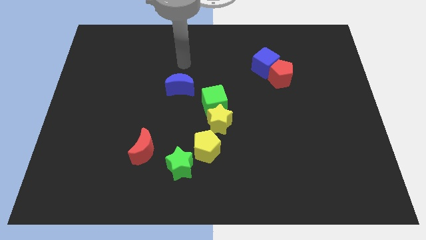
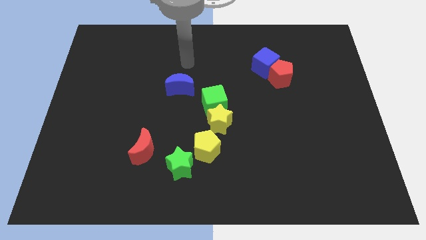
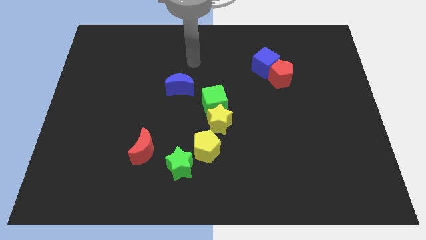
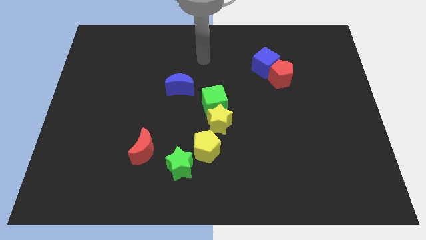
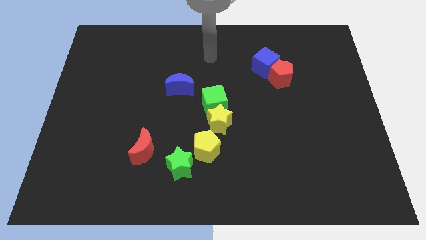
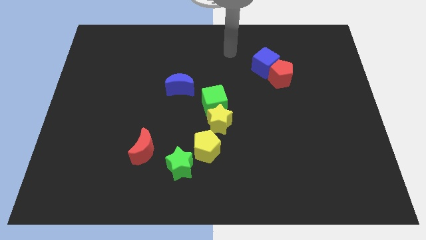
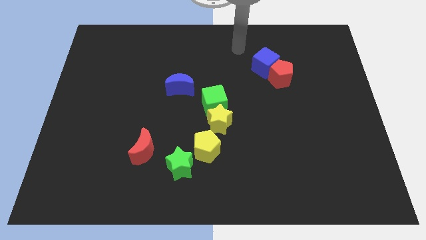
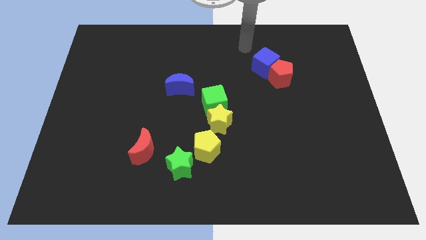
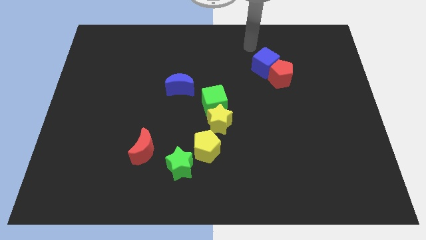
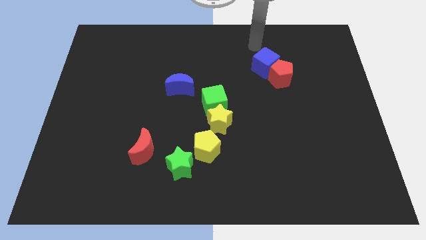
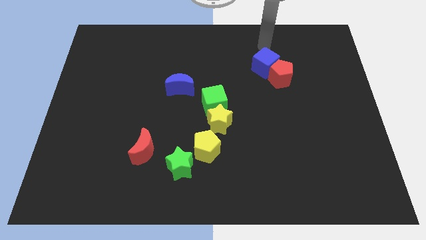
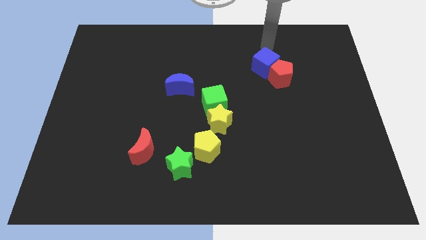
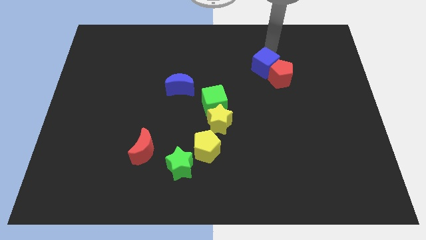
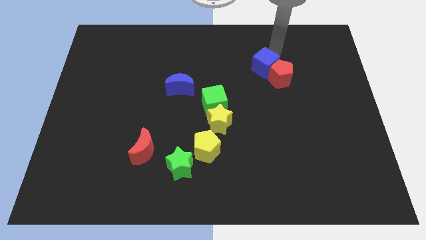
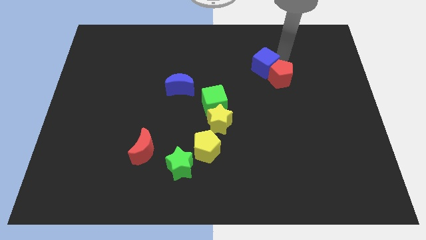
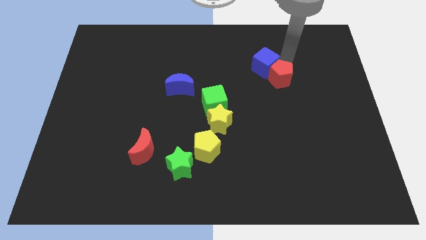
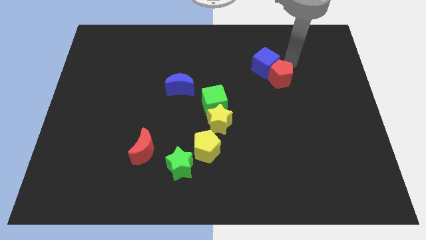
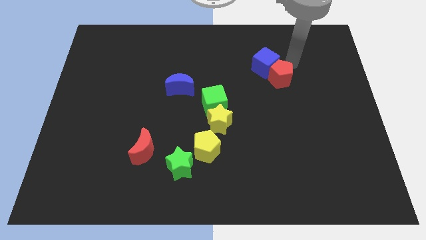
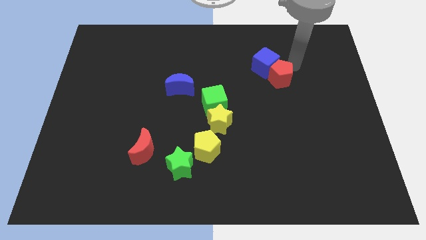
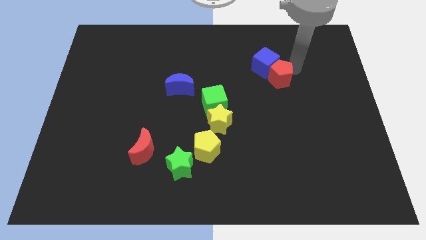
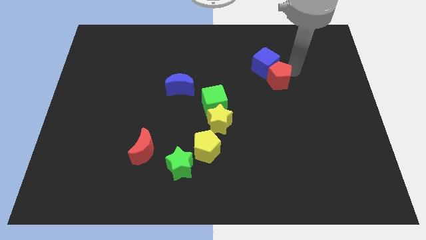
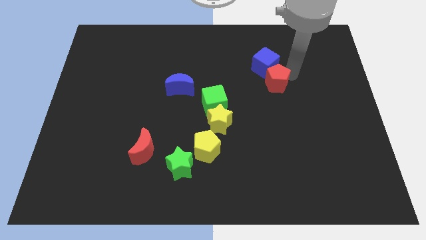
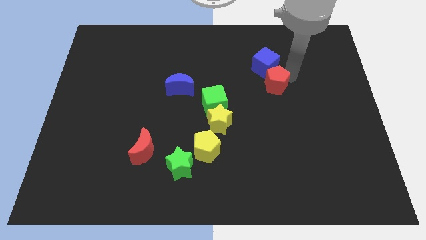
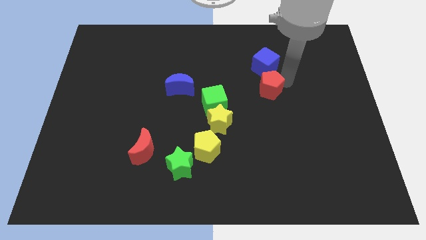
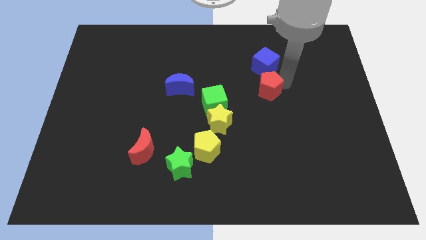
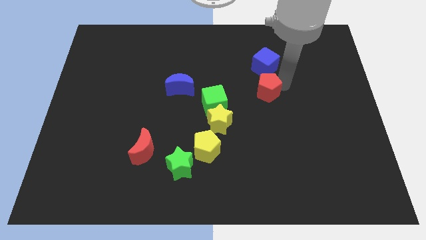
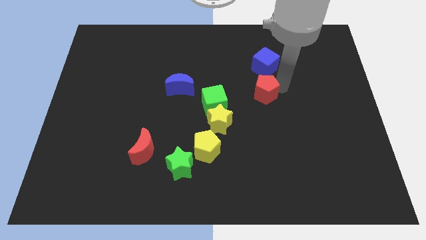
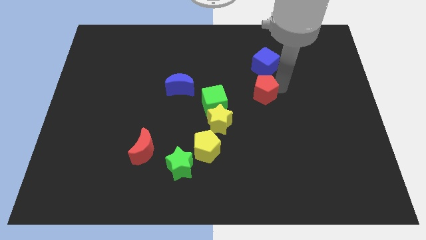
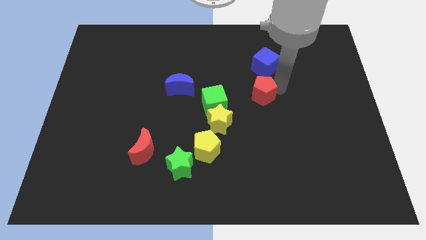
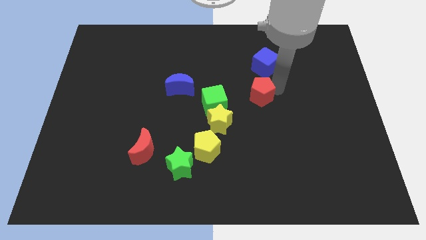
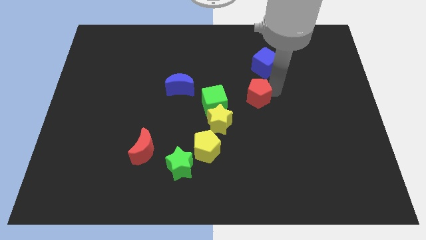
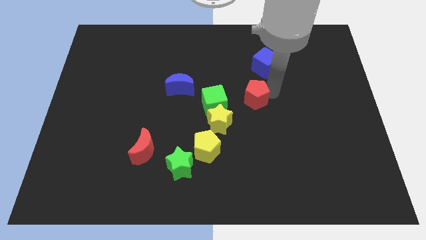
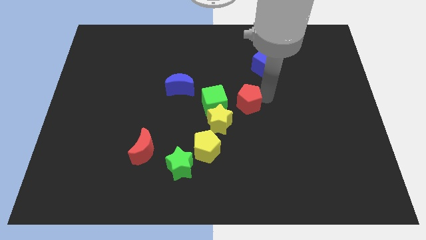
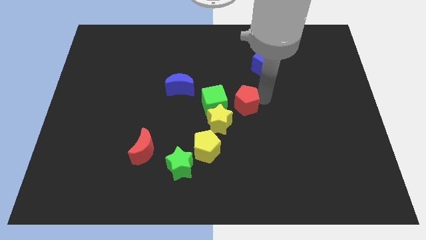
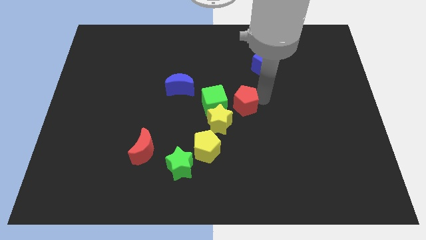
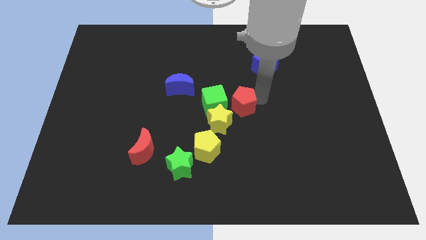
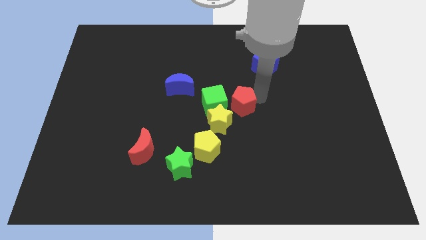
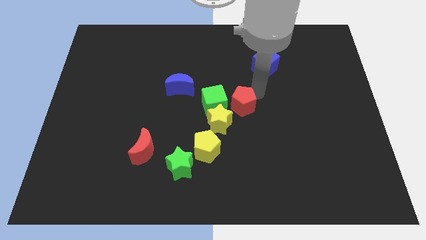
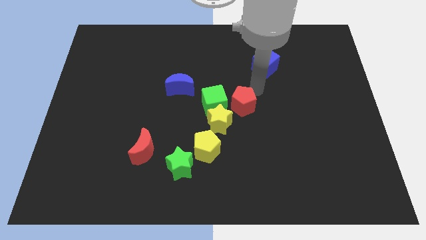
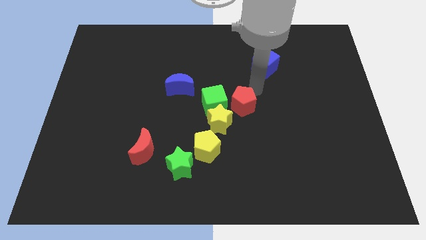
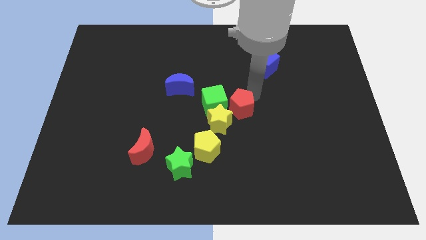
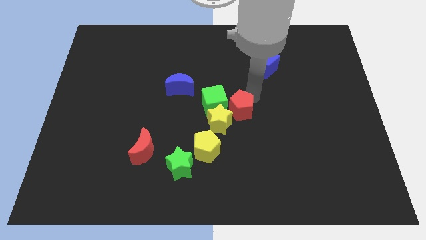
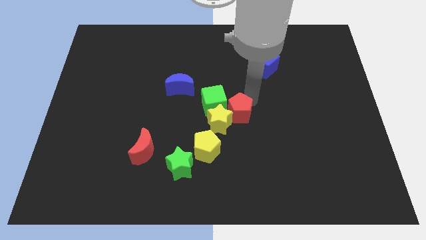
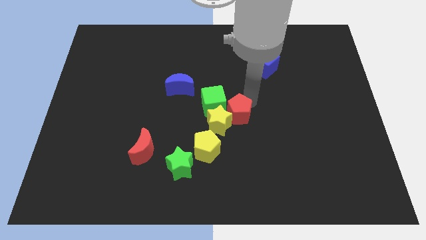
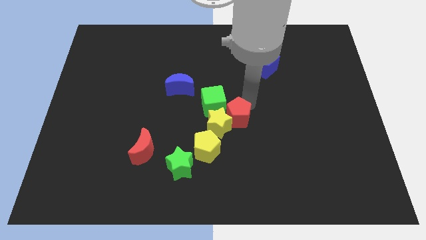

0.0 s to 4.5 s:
put the red pentagon close to the yellow star

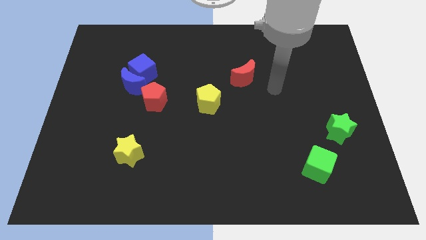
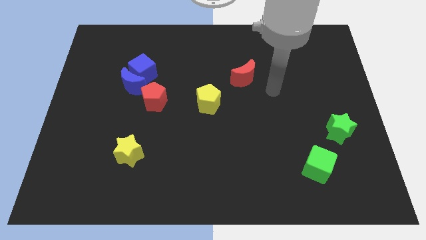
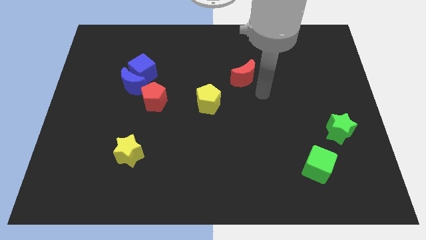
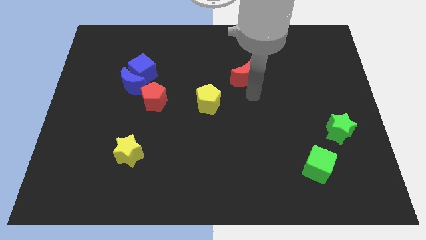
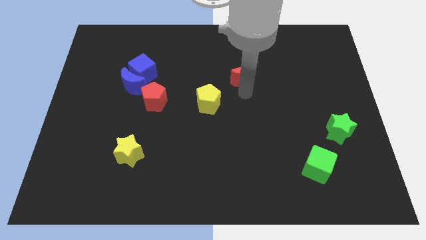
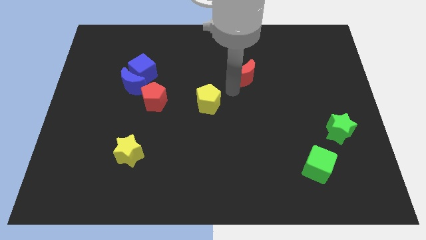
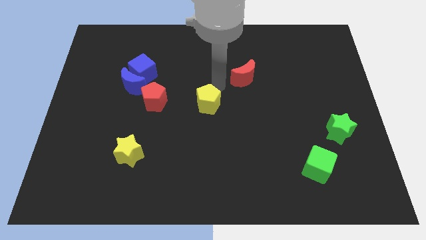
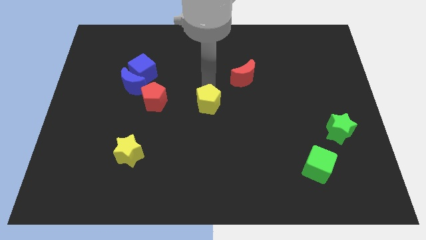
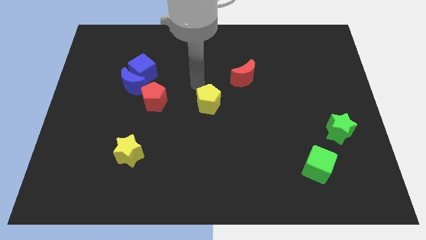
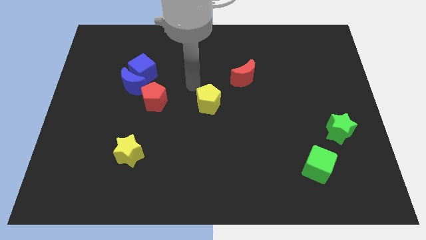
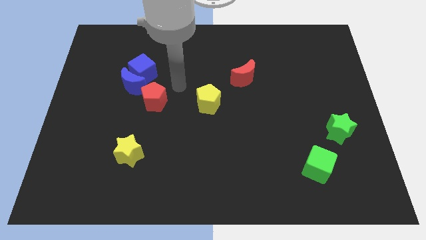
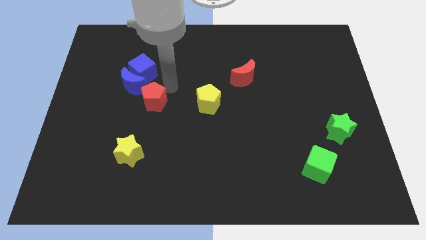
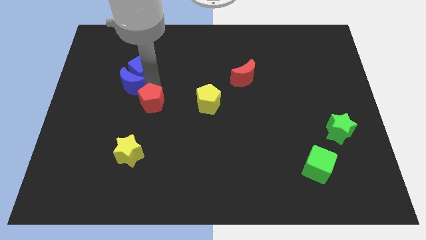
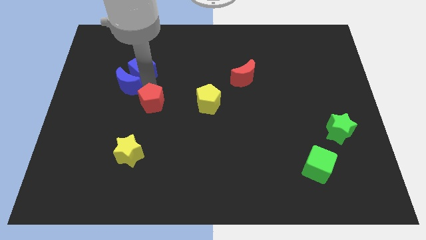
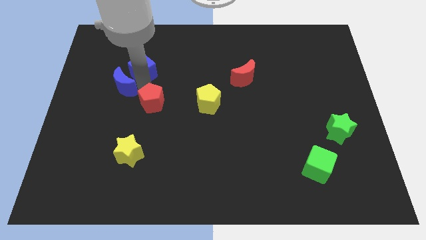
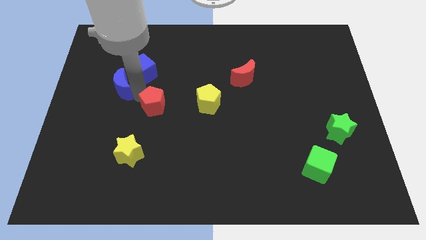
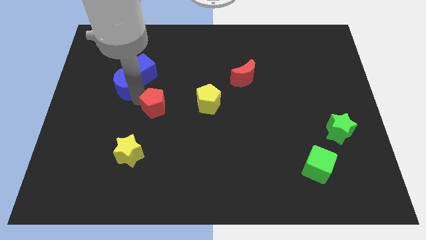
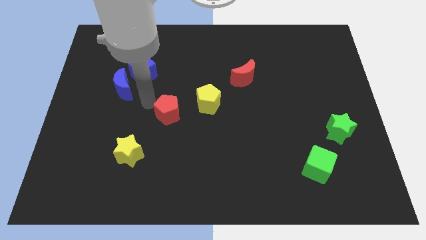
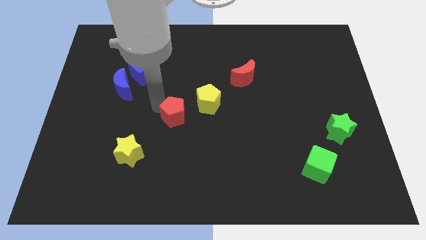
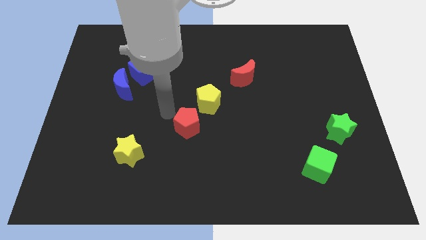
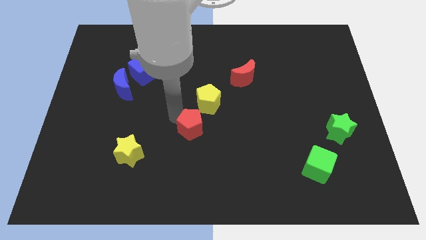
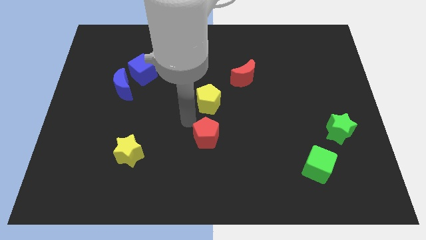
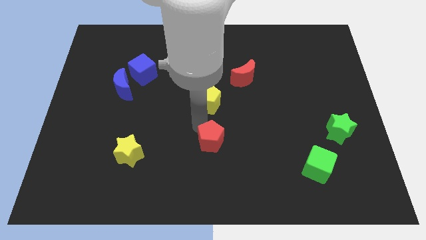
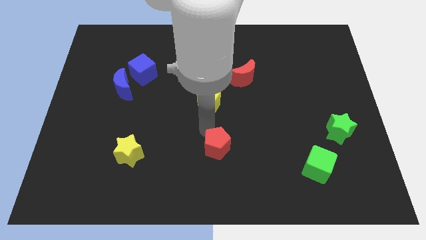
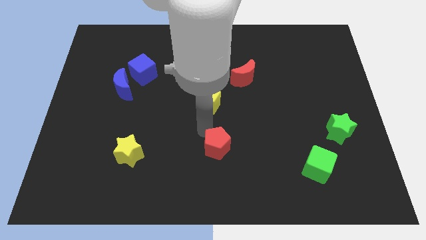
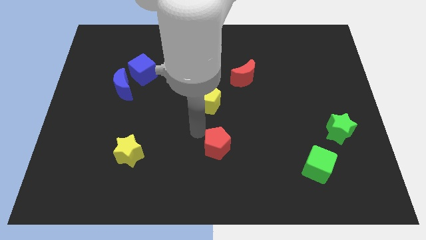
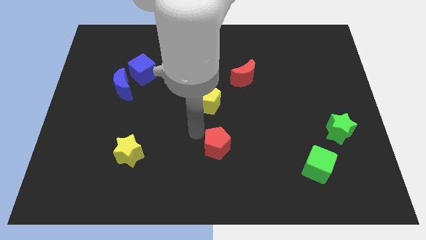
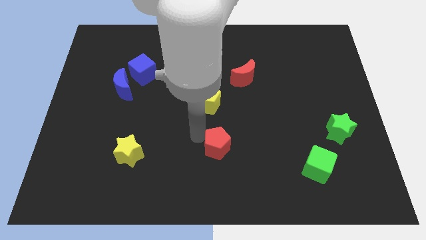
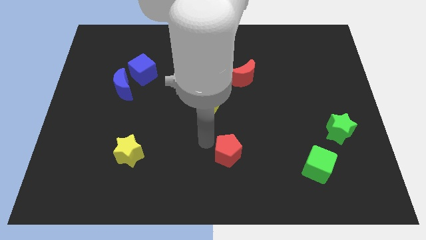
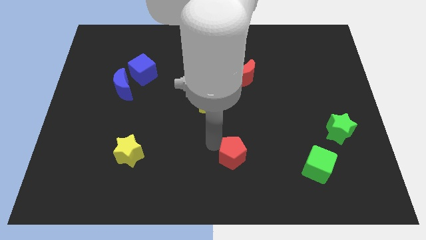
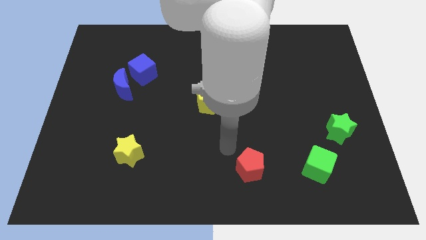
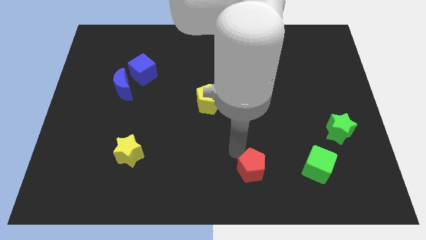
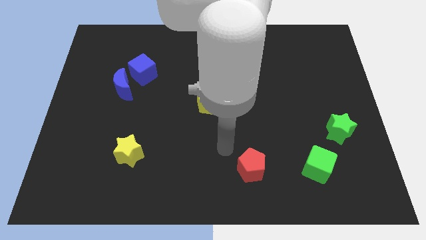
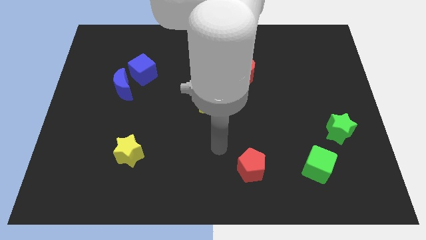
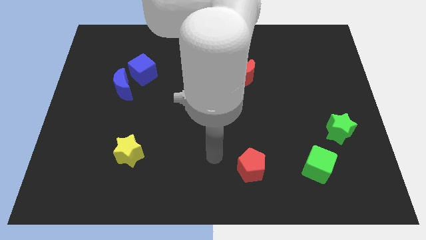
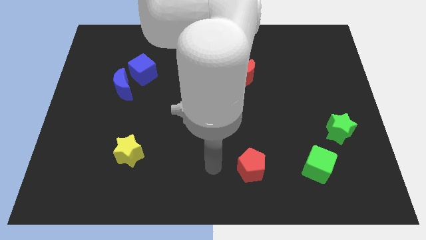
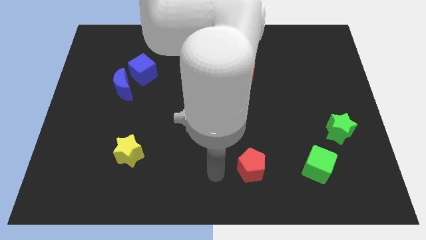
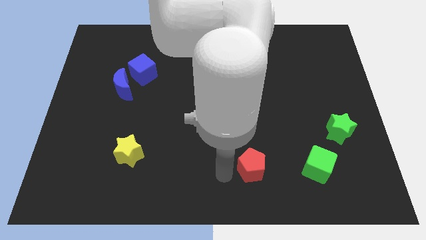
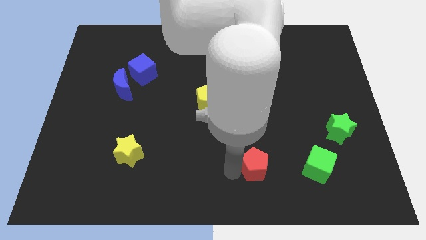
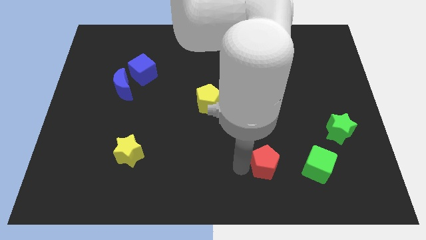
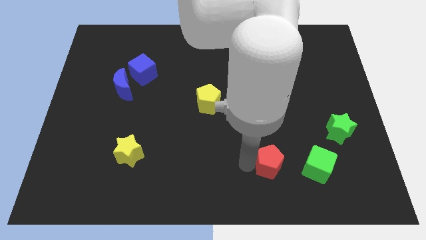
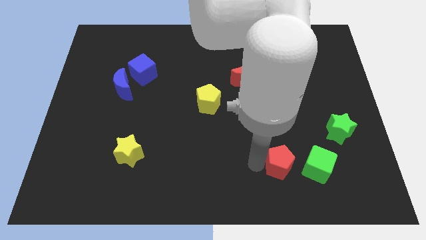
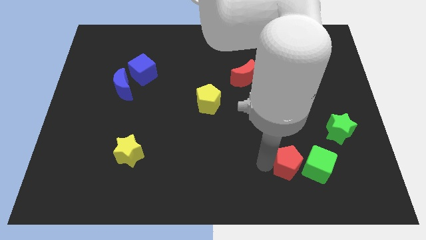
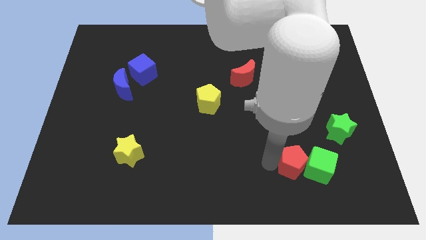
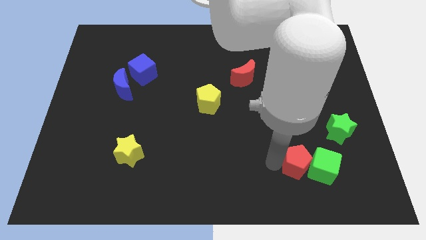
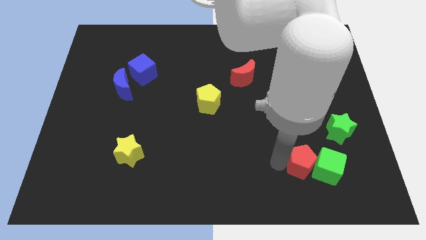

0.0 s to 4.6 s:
push the red pentagon close to the green cube
